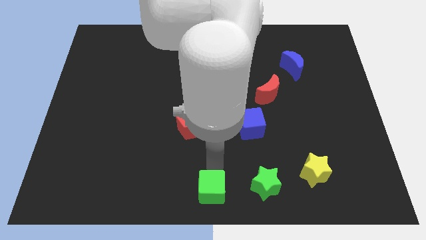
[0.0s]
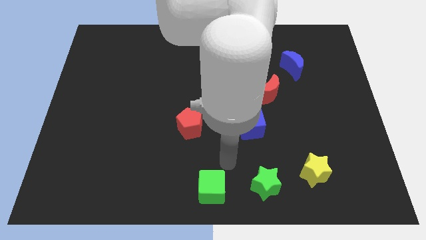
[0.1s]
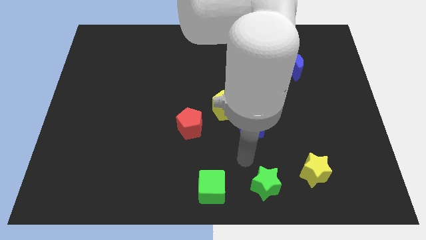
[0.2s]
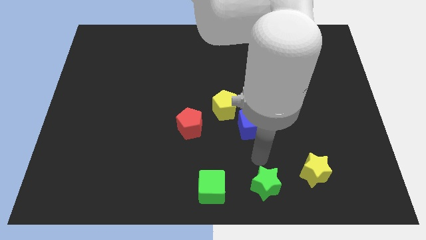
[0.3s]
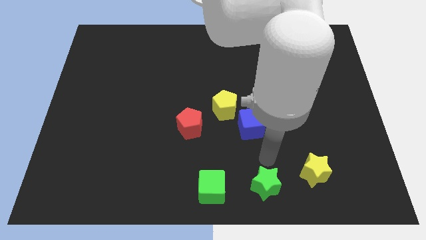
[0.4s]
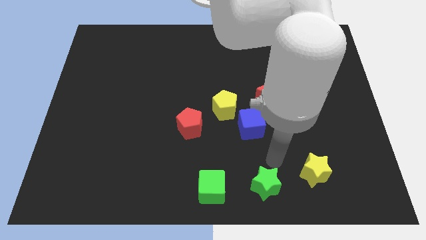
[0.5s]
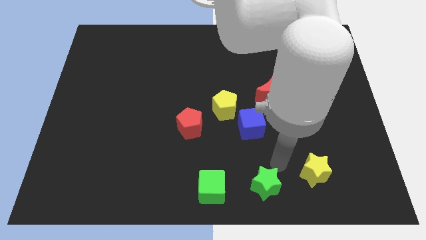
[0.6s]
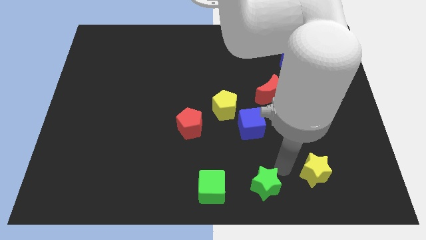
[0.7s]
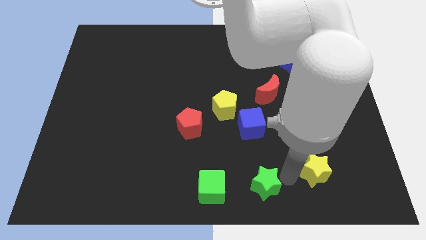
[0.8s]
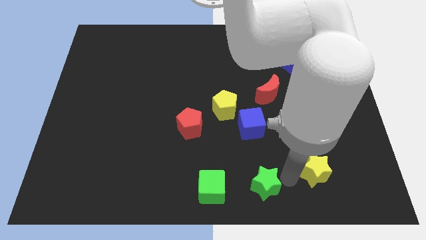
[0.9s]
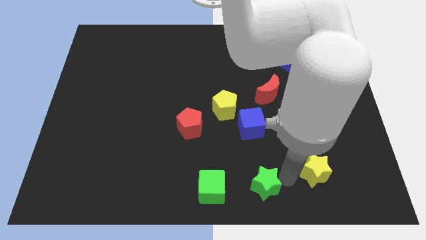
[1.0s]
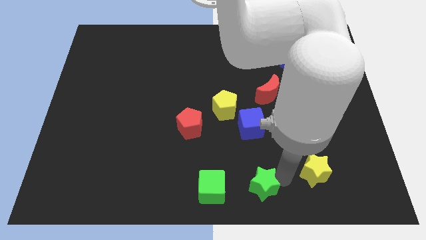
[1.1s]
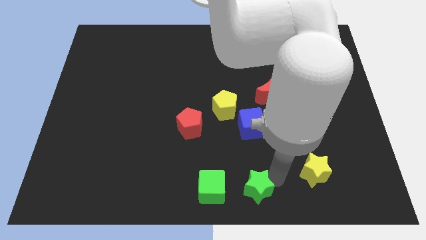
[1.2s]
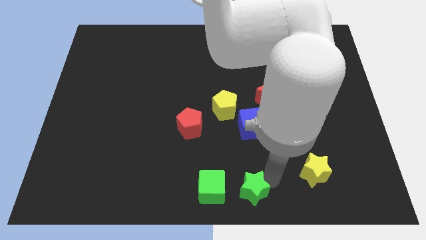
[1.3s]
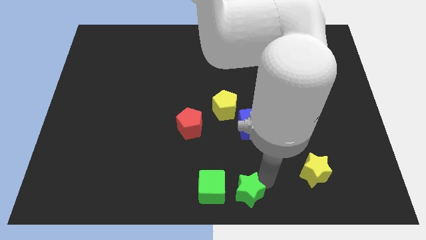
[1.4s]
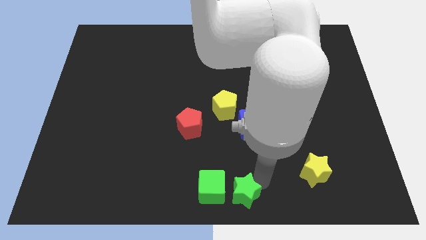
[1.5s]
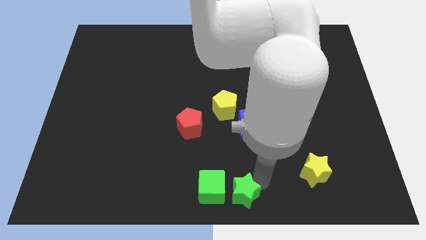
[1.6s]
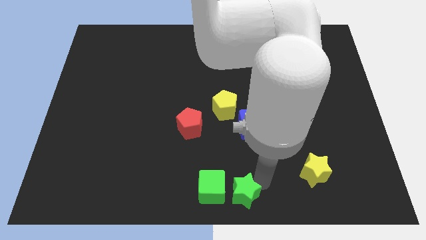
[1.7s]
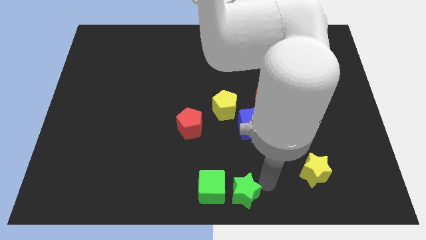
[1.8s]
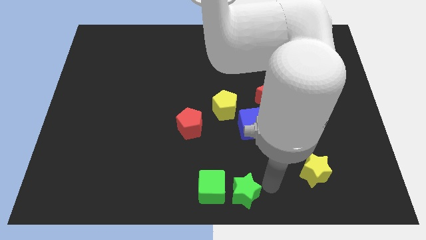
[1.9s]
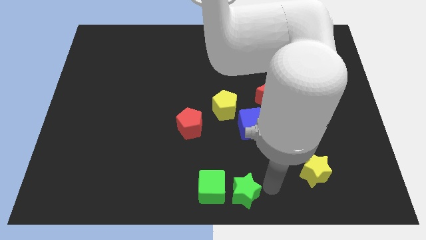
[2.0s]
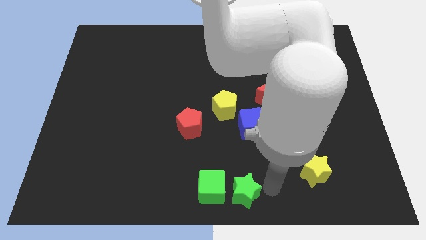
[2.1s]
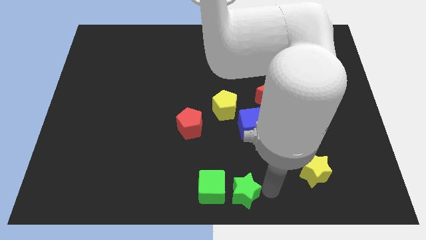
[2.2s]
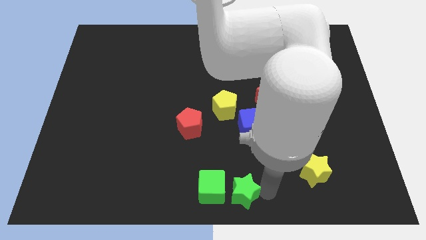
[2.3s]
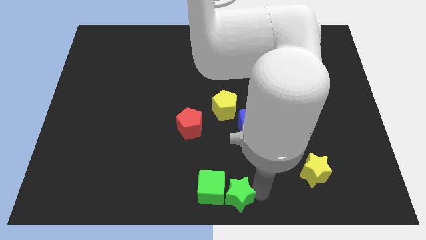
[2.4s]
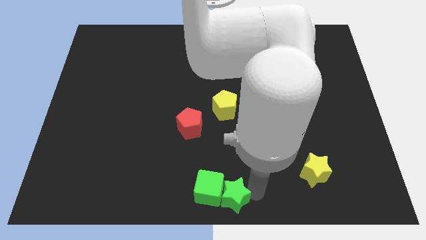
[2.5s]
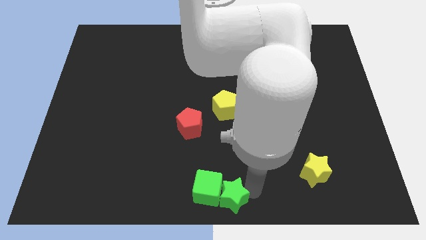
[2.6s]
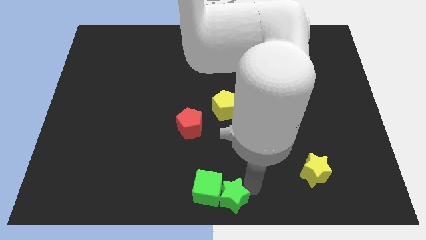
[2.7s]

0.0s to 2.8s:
push the green star into green cube

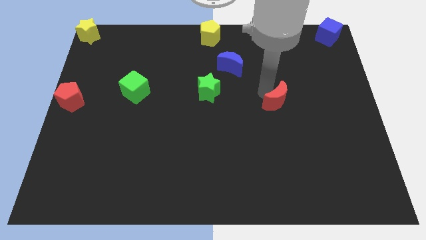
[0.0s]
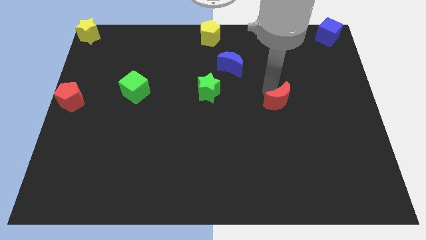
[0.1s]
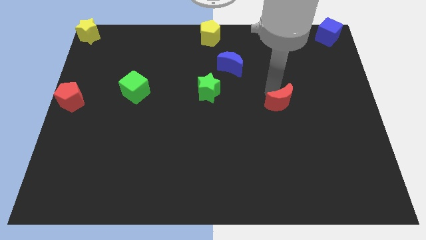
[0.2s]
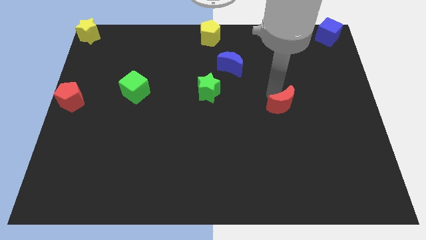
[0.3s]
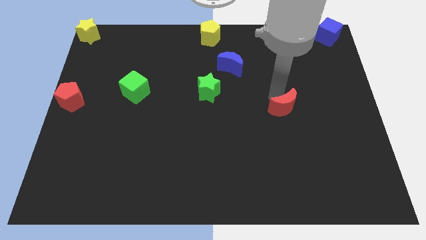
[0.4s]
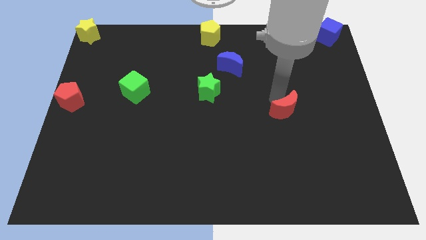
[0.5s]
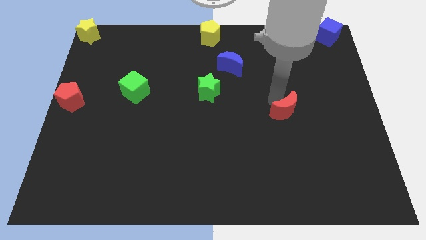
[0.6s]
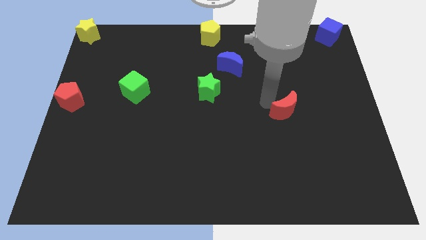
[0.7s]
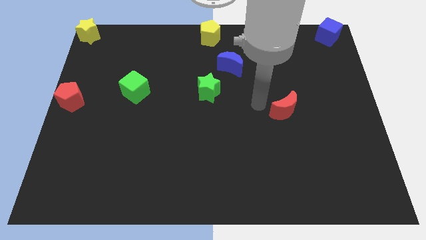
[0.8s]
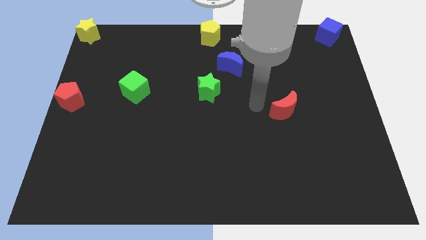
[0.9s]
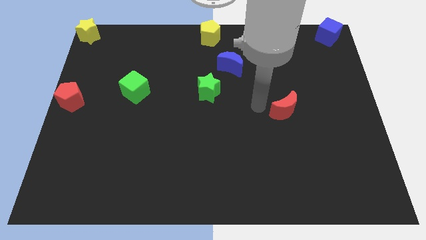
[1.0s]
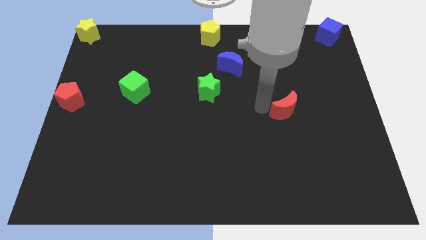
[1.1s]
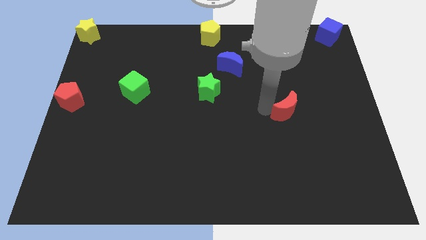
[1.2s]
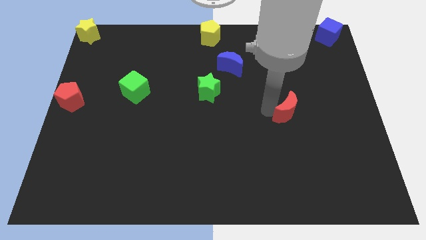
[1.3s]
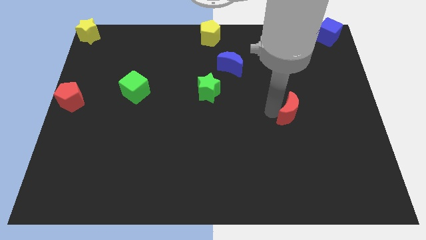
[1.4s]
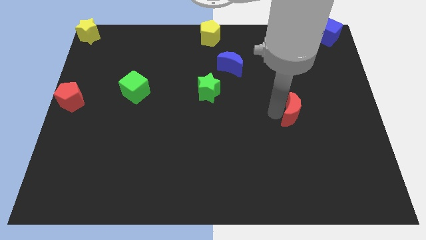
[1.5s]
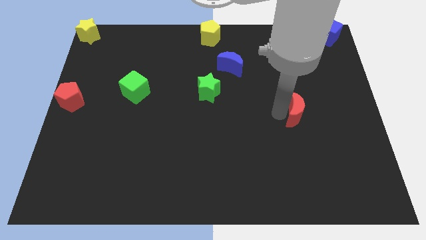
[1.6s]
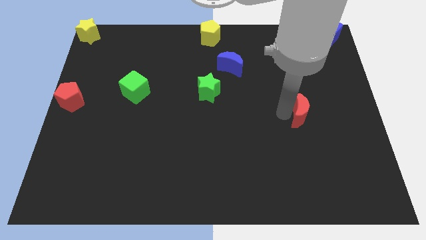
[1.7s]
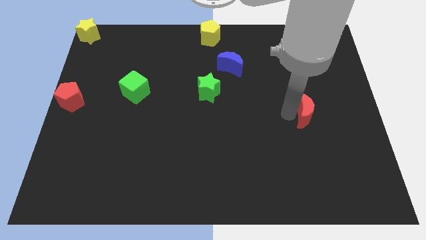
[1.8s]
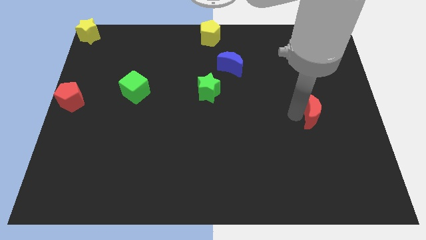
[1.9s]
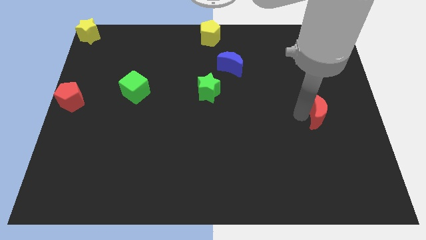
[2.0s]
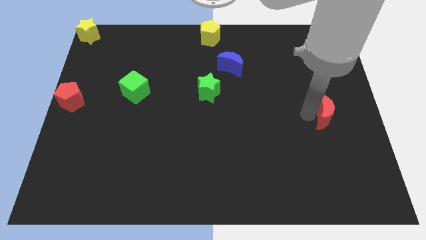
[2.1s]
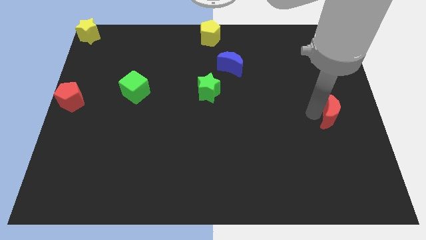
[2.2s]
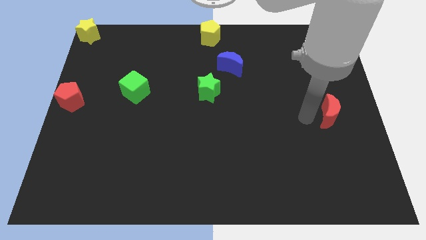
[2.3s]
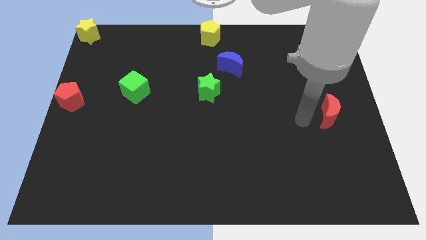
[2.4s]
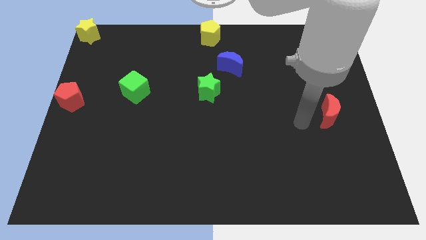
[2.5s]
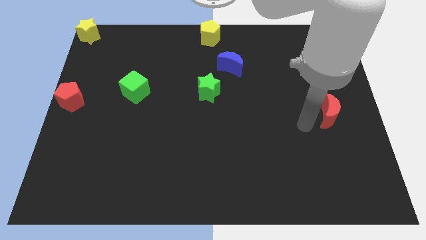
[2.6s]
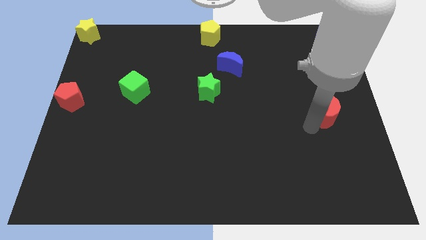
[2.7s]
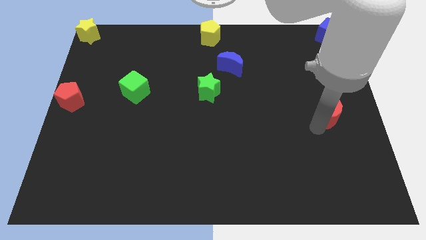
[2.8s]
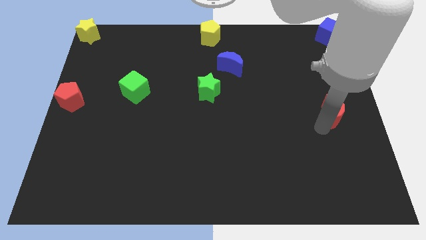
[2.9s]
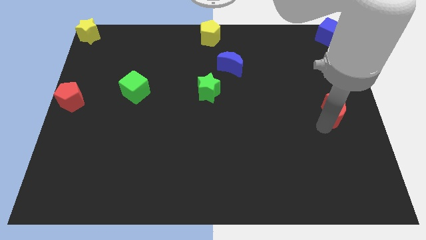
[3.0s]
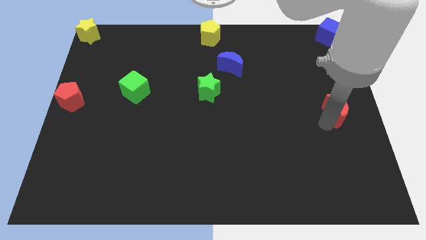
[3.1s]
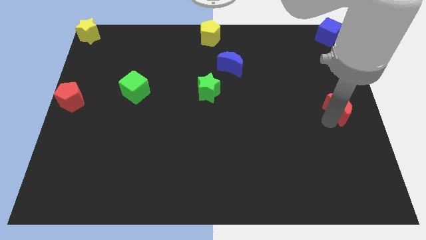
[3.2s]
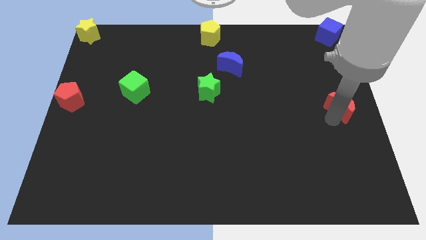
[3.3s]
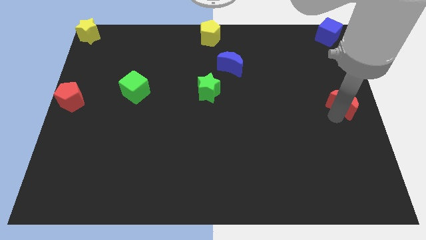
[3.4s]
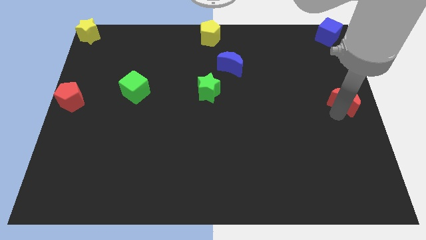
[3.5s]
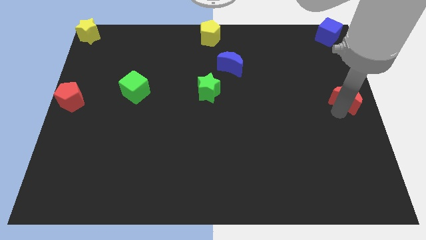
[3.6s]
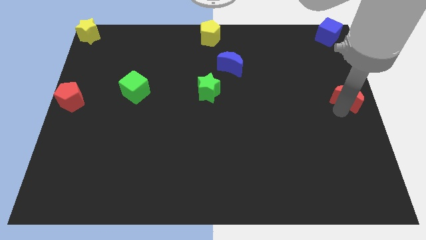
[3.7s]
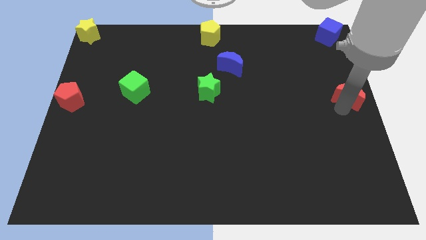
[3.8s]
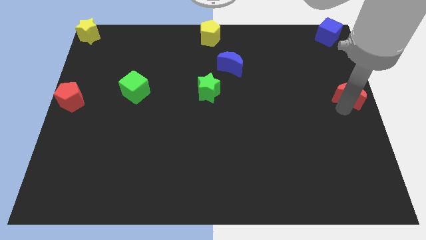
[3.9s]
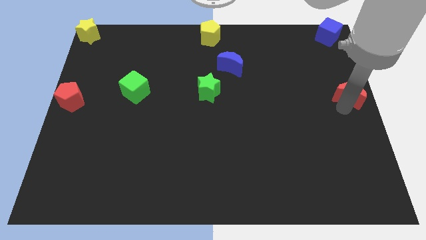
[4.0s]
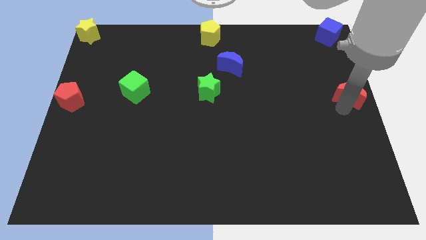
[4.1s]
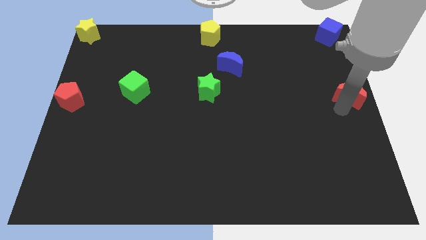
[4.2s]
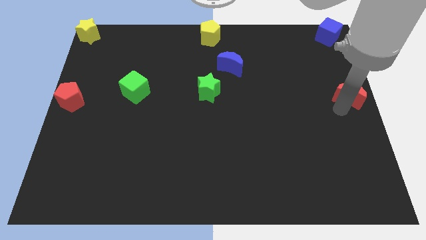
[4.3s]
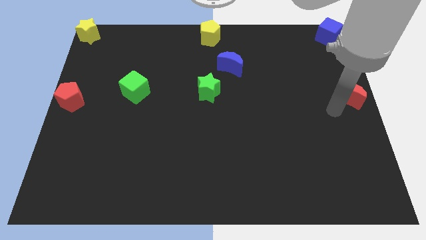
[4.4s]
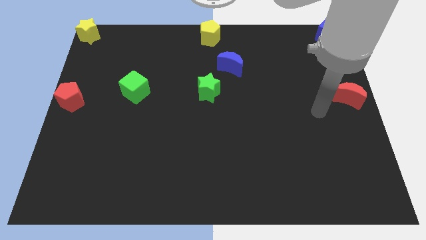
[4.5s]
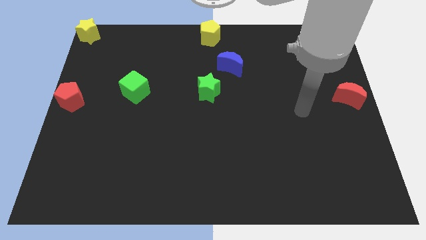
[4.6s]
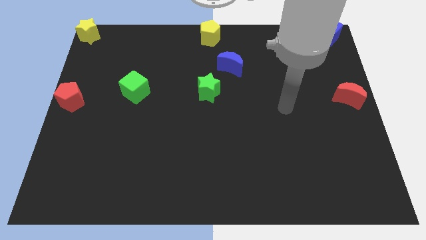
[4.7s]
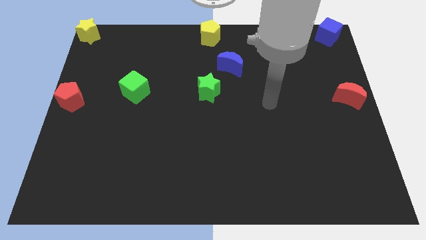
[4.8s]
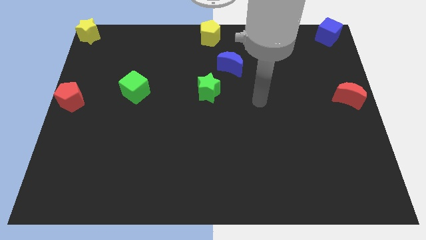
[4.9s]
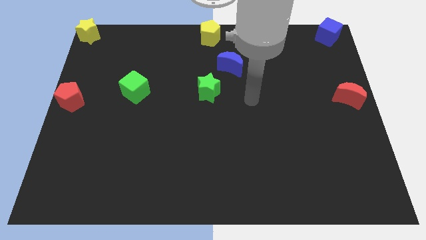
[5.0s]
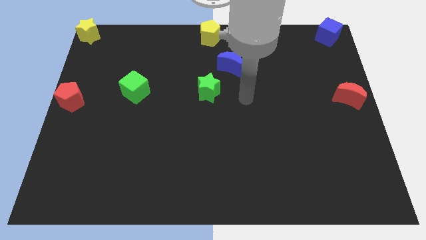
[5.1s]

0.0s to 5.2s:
move the red crescent to the center right side of the board

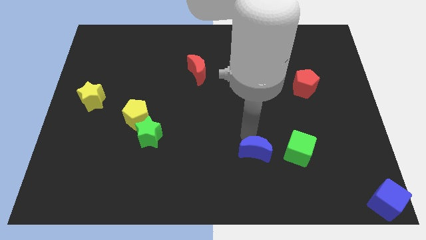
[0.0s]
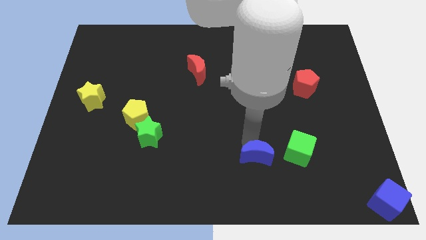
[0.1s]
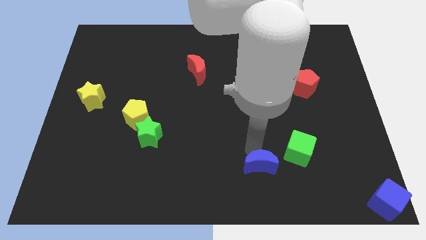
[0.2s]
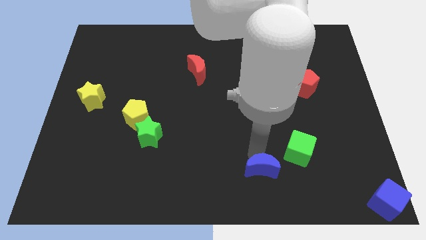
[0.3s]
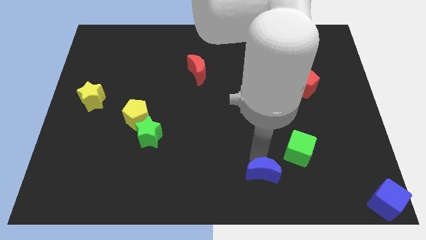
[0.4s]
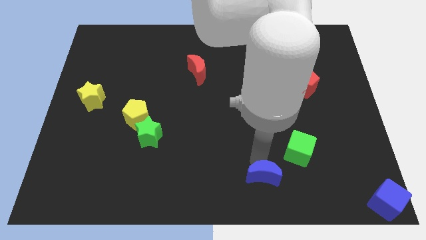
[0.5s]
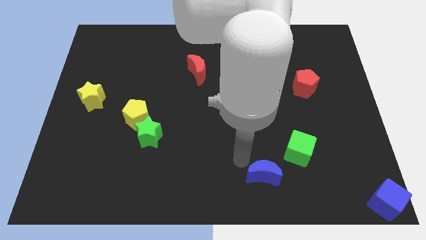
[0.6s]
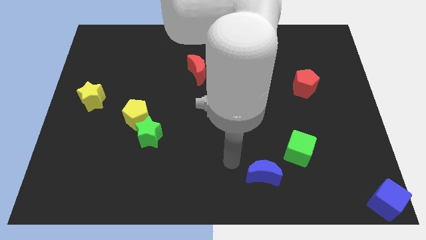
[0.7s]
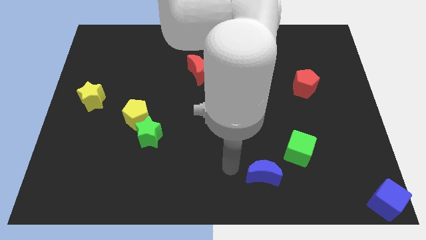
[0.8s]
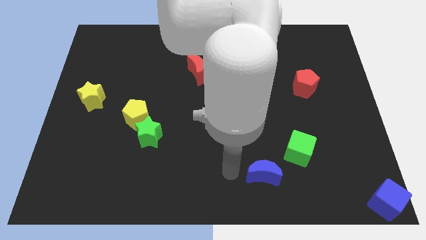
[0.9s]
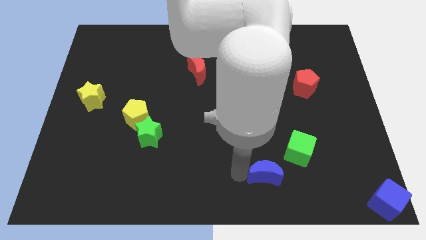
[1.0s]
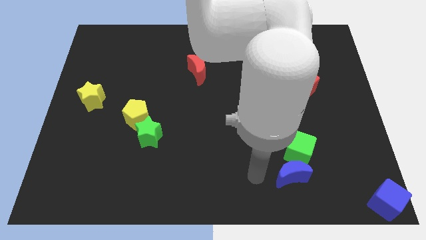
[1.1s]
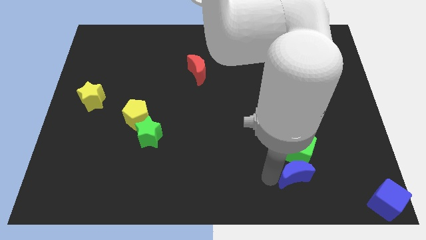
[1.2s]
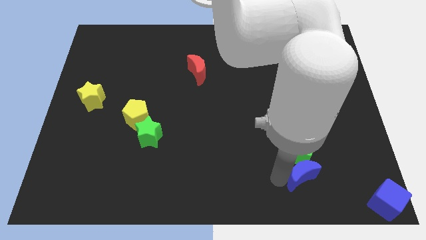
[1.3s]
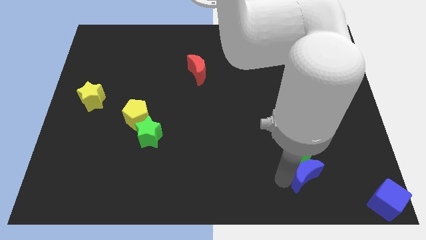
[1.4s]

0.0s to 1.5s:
move the blue moon to the bottom side of the green cube
